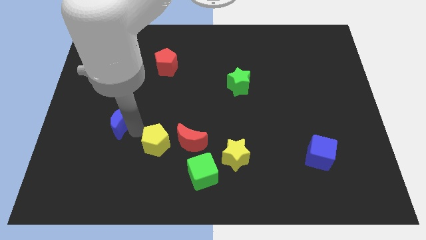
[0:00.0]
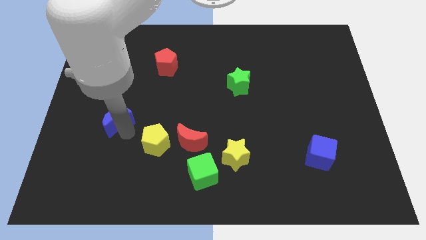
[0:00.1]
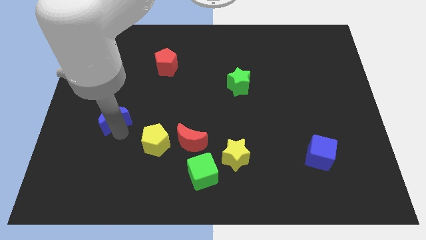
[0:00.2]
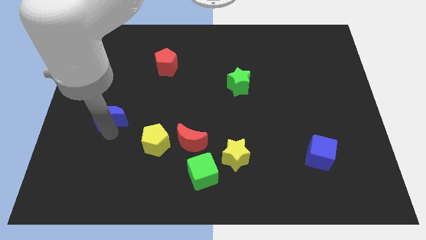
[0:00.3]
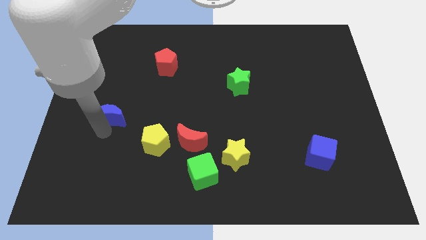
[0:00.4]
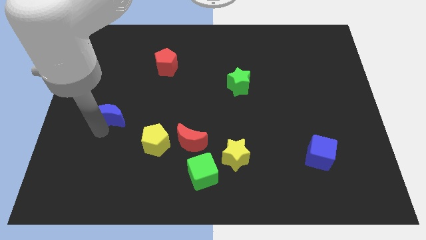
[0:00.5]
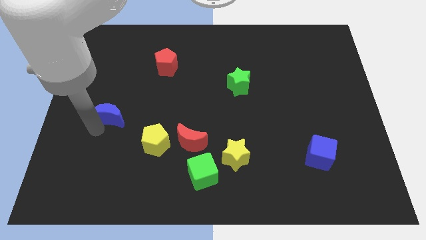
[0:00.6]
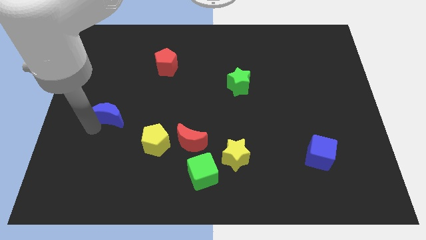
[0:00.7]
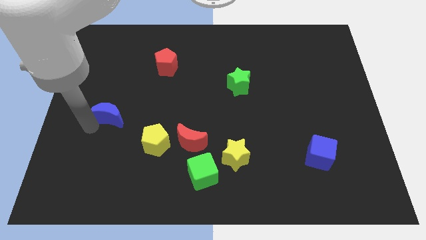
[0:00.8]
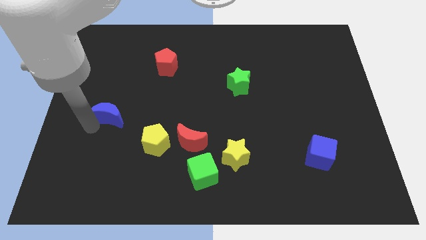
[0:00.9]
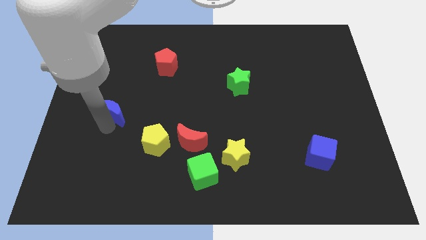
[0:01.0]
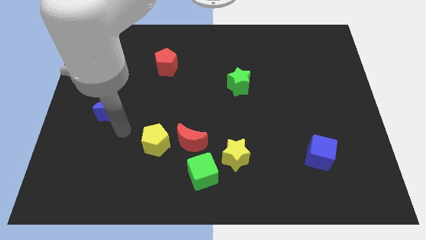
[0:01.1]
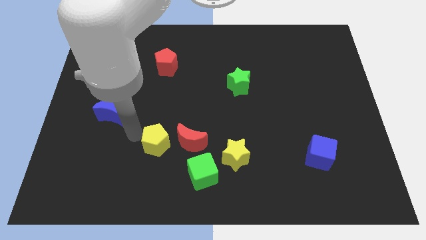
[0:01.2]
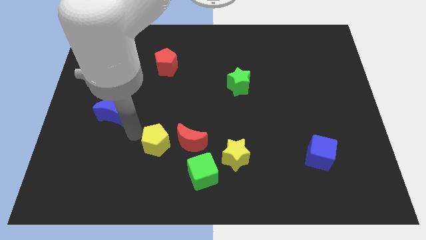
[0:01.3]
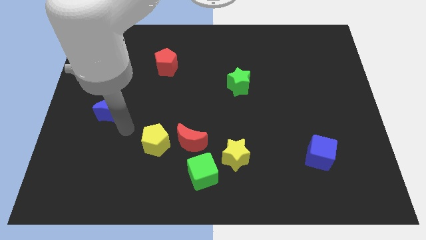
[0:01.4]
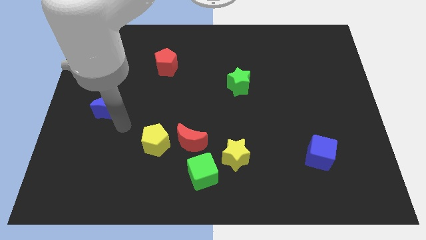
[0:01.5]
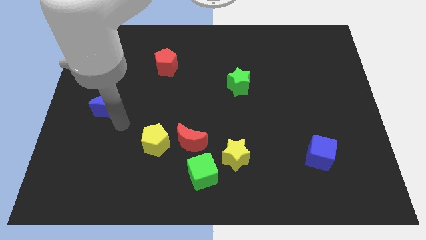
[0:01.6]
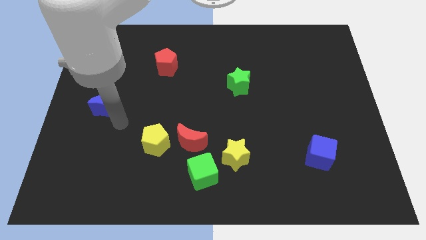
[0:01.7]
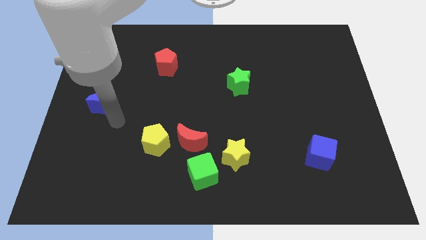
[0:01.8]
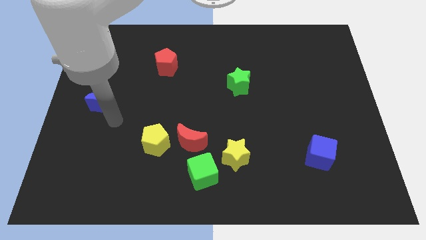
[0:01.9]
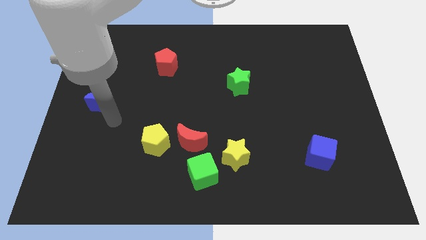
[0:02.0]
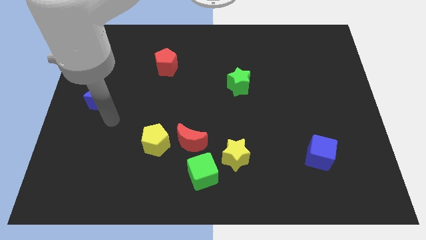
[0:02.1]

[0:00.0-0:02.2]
place blue crescent towards the top left side

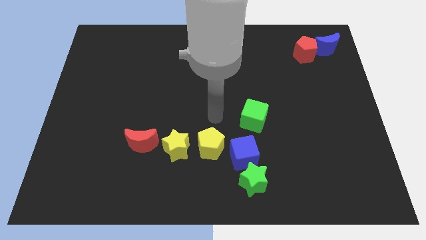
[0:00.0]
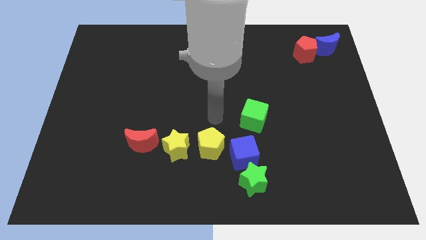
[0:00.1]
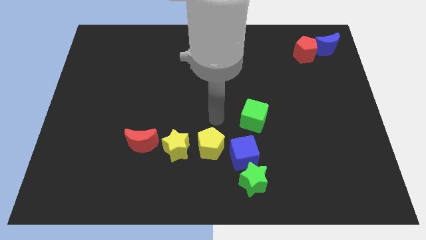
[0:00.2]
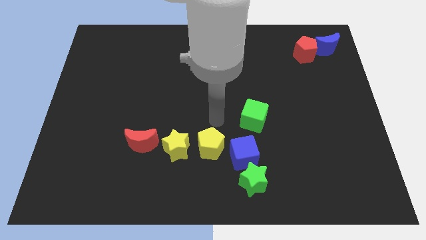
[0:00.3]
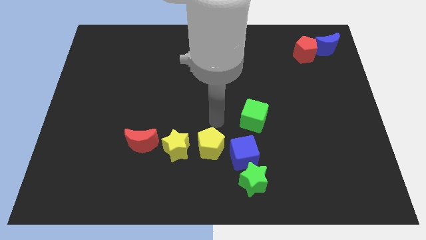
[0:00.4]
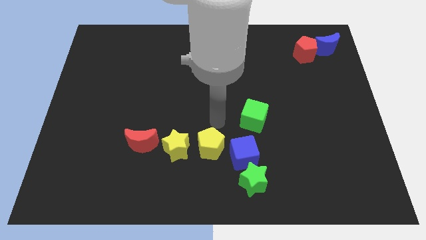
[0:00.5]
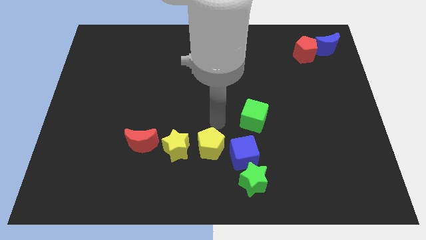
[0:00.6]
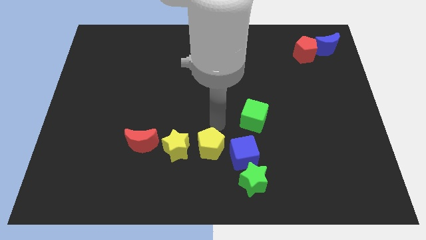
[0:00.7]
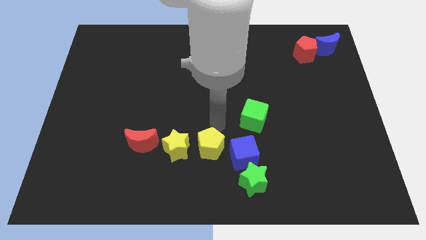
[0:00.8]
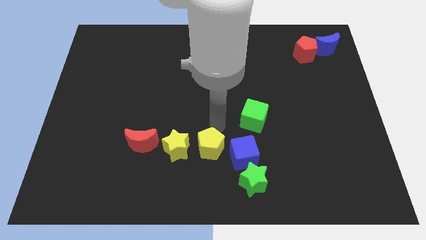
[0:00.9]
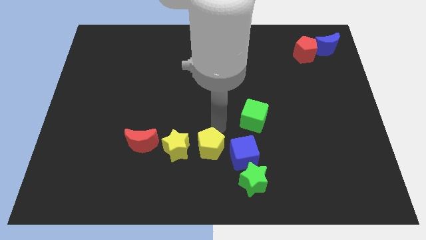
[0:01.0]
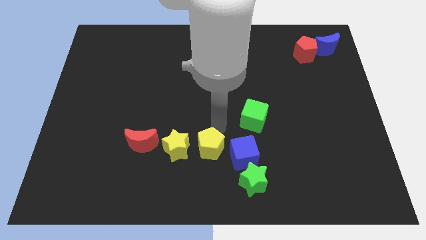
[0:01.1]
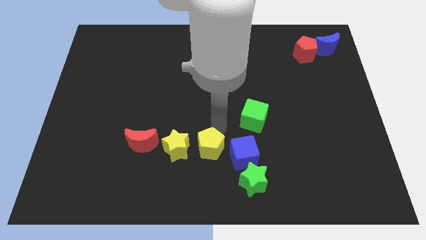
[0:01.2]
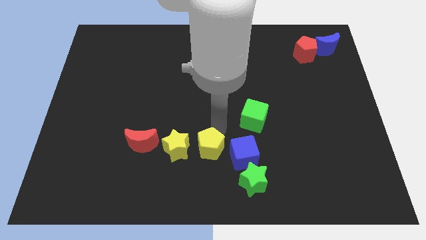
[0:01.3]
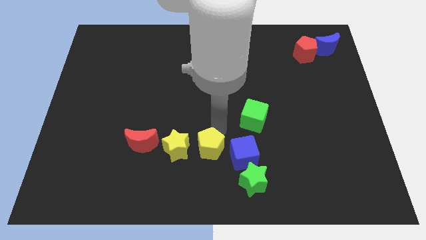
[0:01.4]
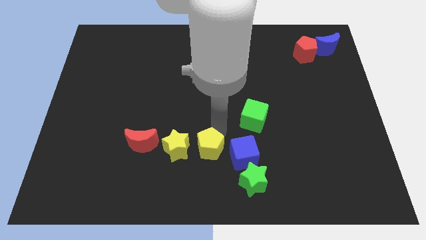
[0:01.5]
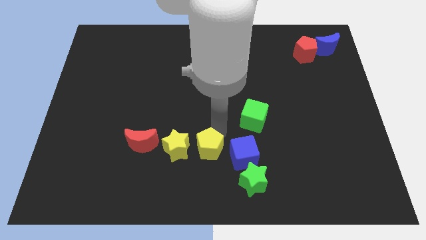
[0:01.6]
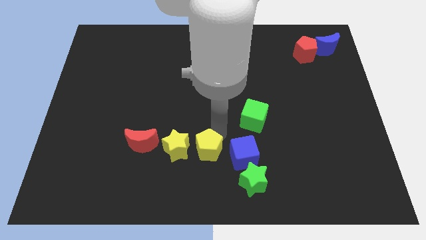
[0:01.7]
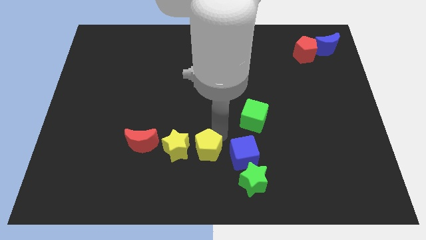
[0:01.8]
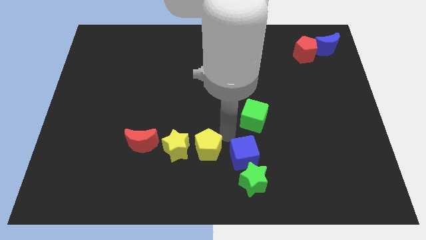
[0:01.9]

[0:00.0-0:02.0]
touch the top of yellow pentagon

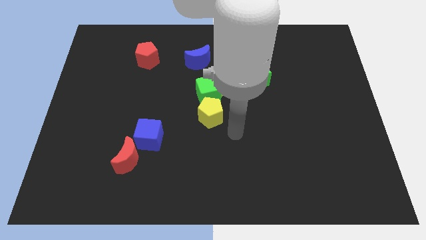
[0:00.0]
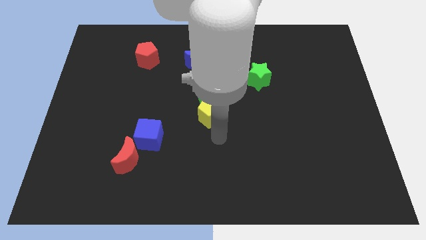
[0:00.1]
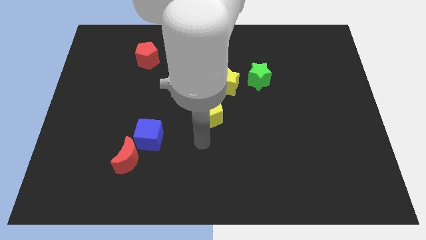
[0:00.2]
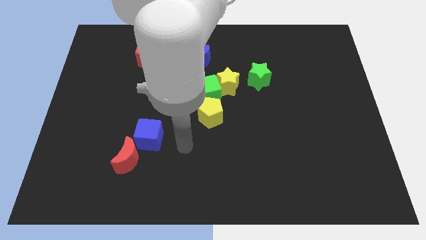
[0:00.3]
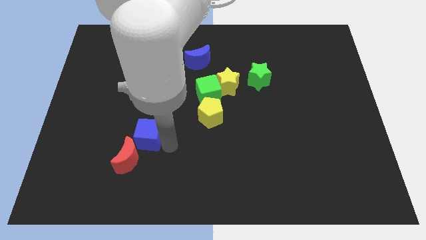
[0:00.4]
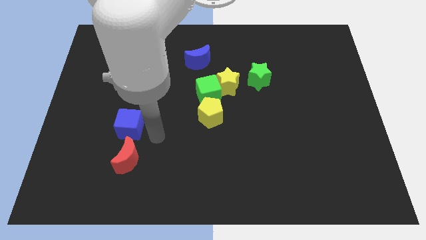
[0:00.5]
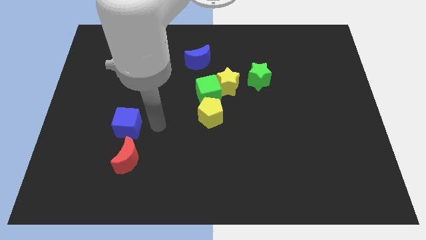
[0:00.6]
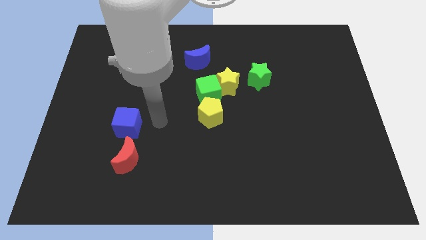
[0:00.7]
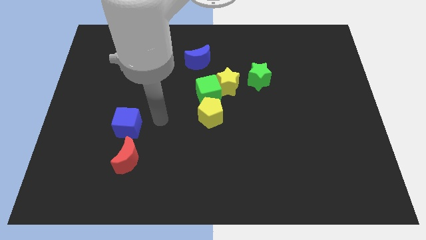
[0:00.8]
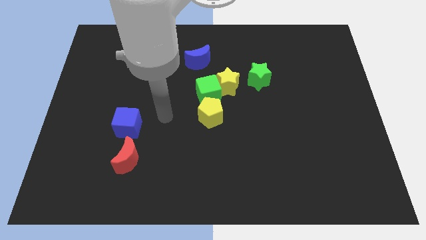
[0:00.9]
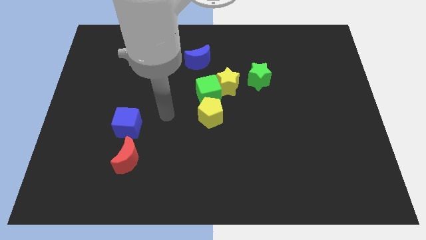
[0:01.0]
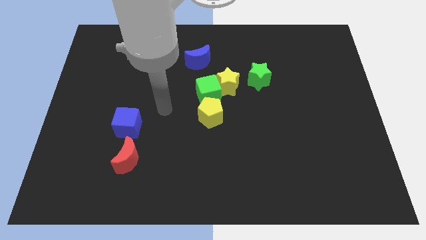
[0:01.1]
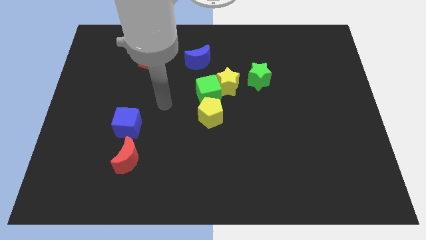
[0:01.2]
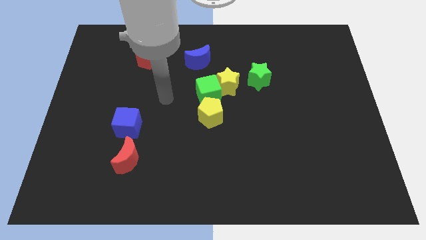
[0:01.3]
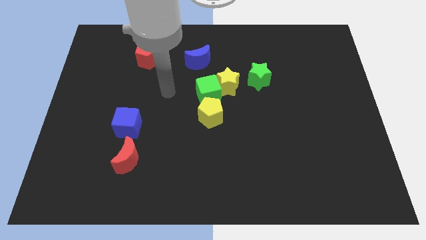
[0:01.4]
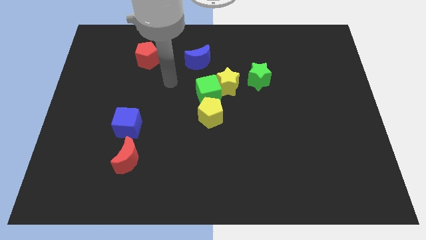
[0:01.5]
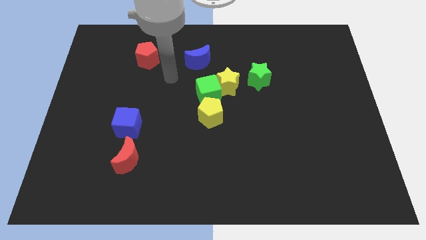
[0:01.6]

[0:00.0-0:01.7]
slide the blue cube to the top of the red moon

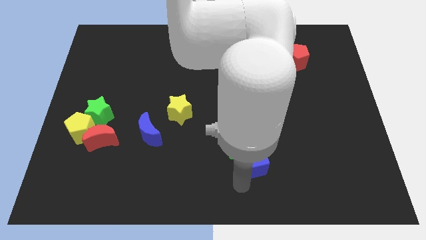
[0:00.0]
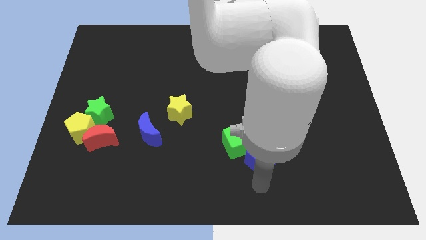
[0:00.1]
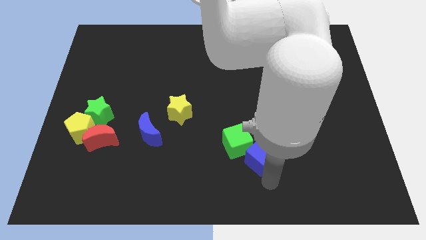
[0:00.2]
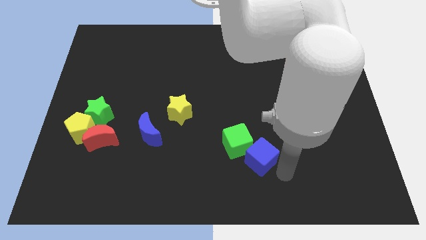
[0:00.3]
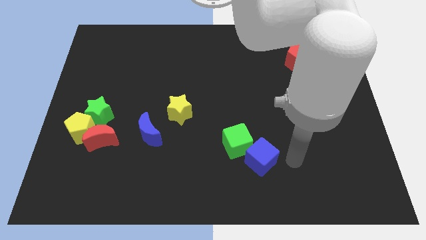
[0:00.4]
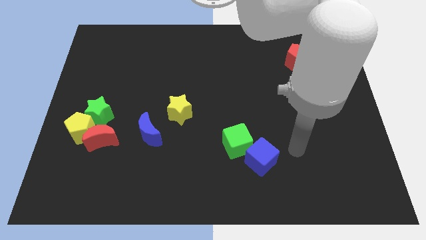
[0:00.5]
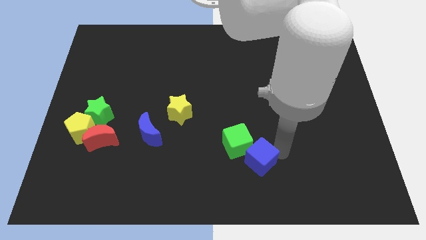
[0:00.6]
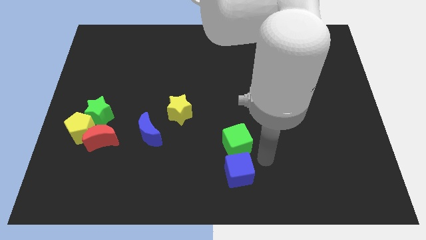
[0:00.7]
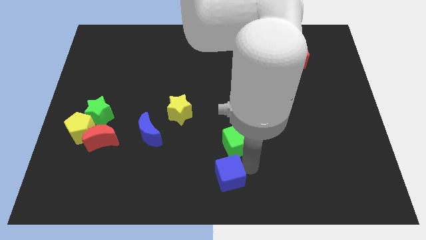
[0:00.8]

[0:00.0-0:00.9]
move the blue cube below the green cube

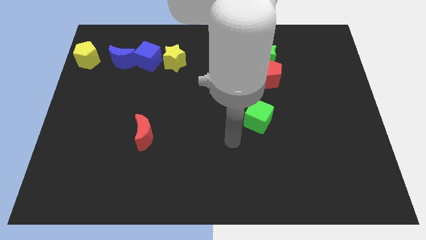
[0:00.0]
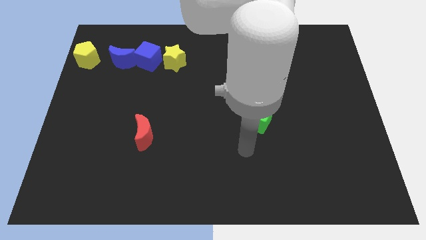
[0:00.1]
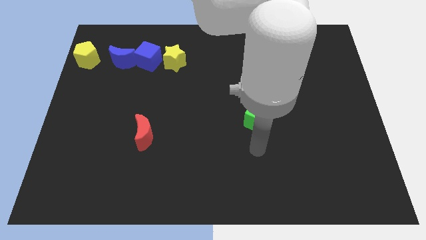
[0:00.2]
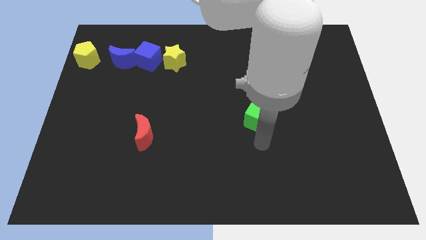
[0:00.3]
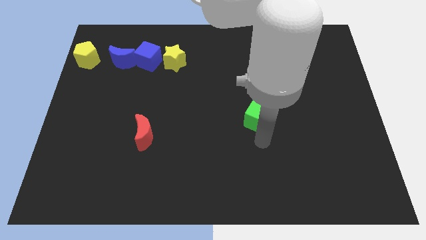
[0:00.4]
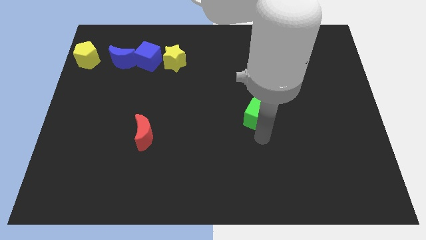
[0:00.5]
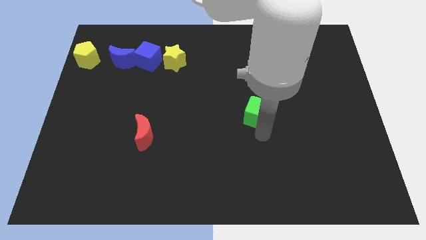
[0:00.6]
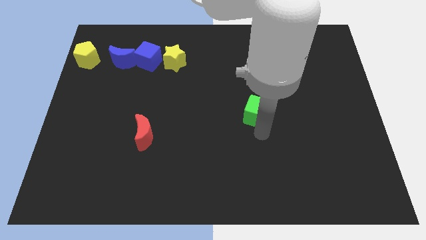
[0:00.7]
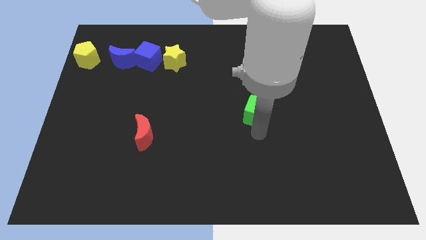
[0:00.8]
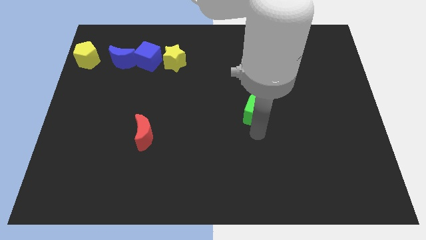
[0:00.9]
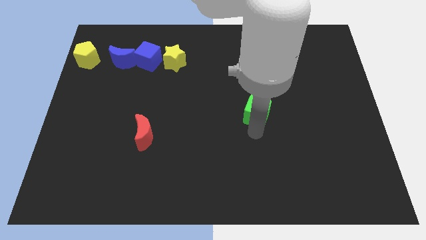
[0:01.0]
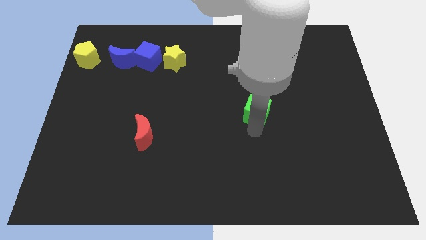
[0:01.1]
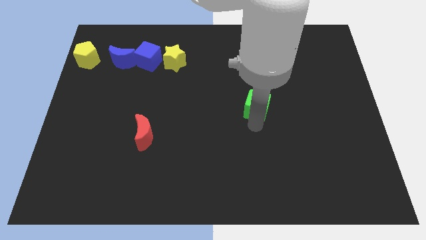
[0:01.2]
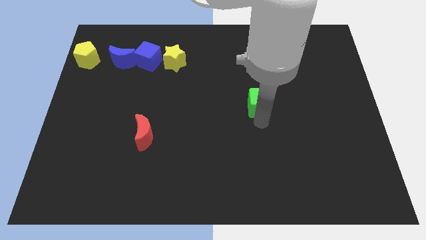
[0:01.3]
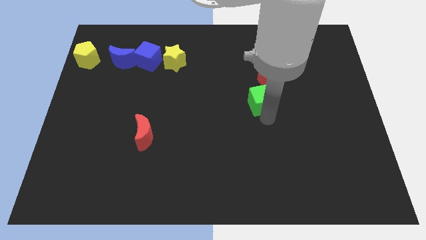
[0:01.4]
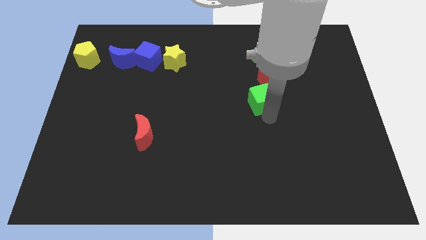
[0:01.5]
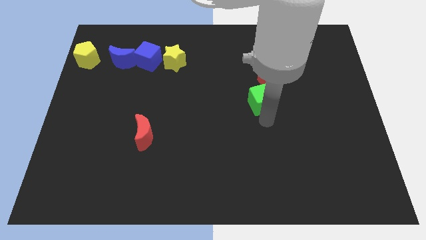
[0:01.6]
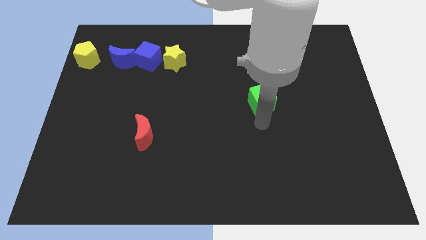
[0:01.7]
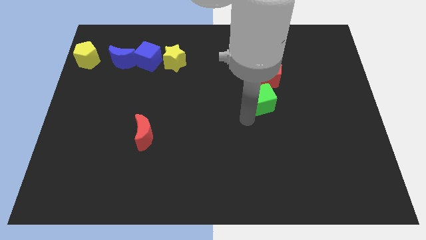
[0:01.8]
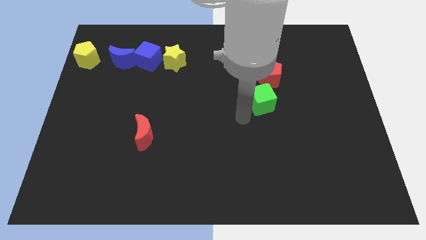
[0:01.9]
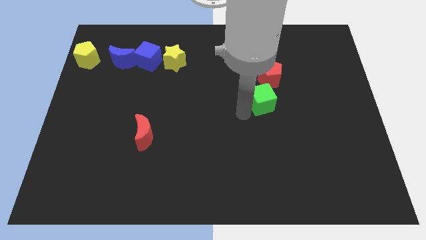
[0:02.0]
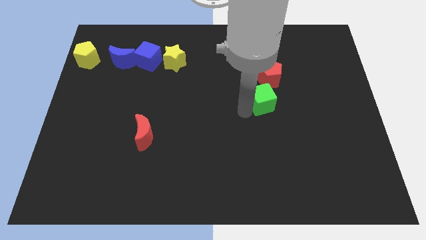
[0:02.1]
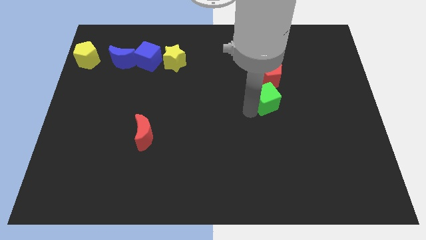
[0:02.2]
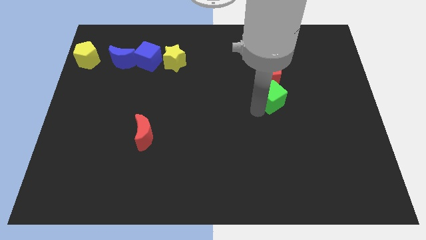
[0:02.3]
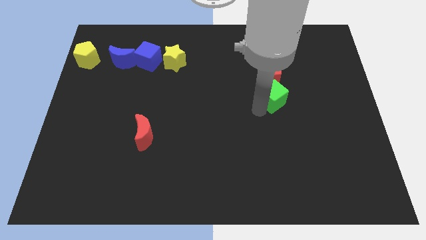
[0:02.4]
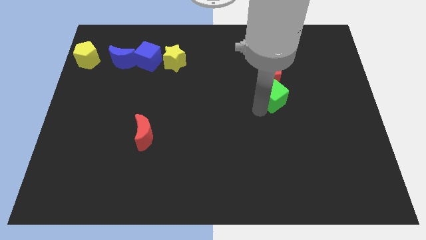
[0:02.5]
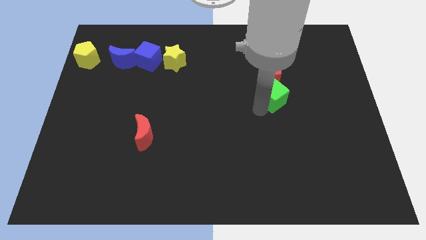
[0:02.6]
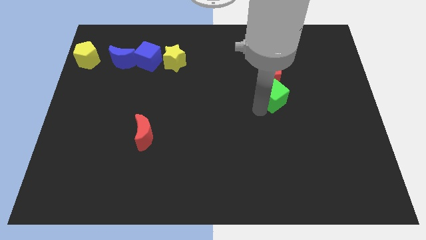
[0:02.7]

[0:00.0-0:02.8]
place the green cube below into the red pentagon
